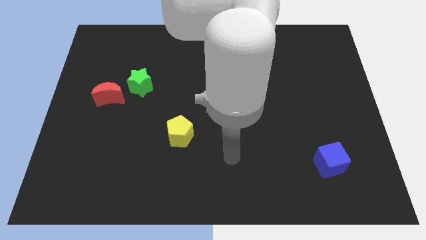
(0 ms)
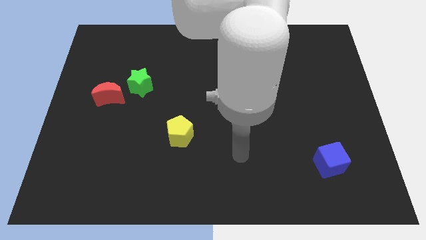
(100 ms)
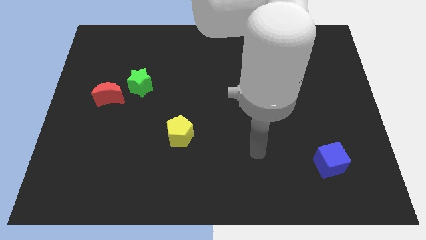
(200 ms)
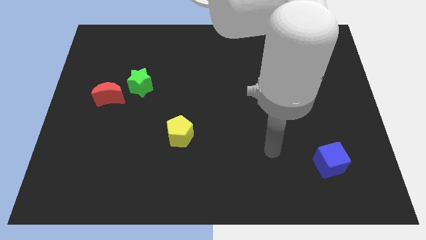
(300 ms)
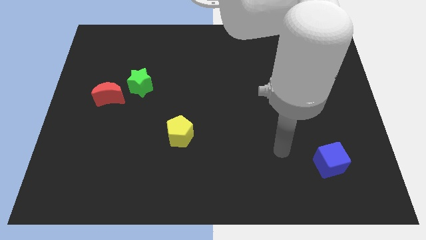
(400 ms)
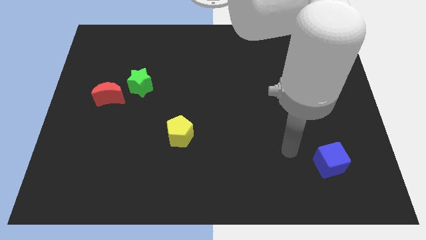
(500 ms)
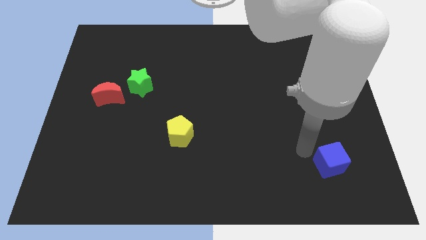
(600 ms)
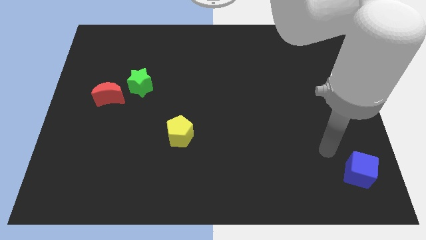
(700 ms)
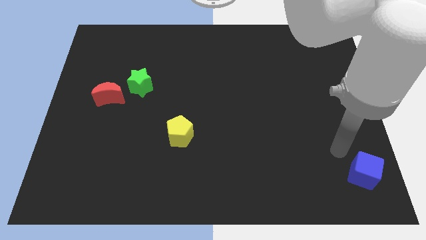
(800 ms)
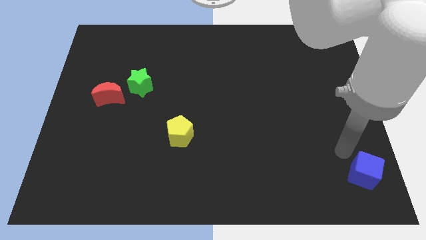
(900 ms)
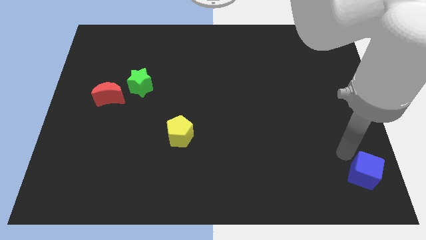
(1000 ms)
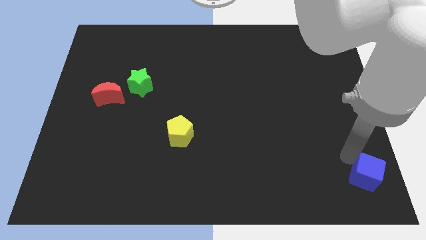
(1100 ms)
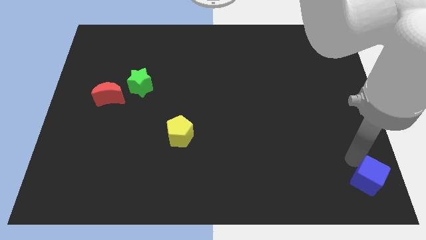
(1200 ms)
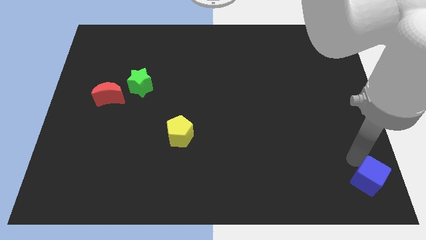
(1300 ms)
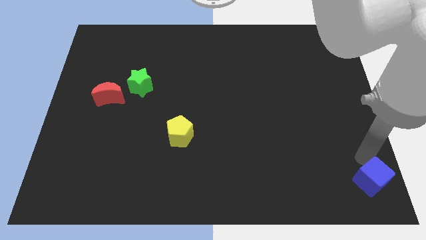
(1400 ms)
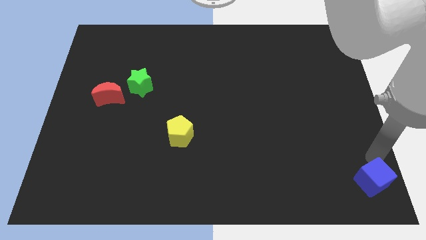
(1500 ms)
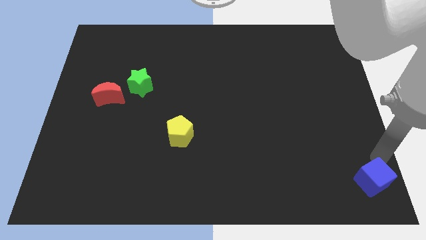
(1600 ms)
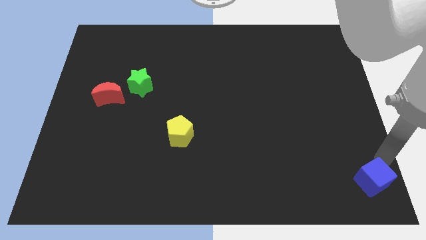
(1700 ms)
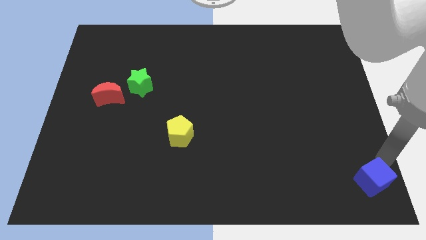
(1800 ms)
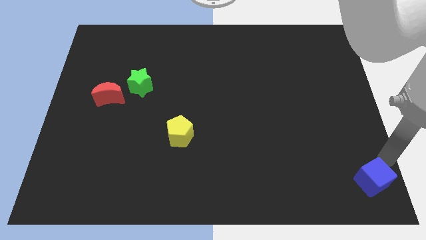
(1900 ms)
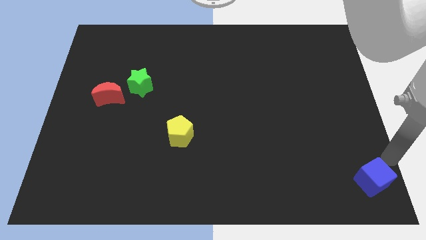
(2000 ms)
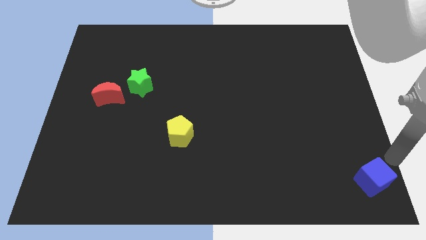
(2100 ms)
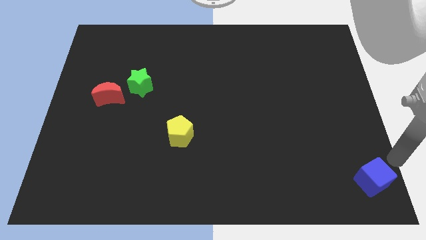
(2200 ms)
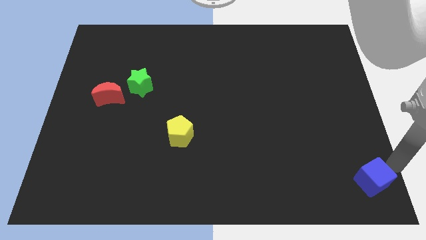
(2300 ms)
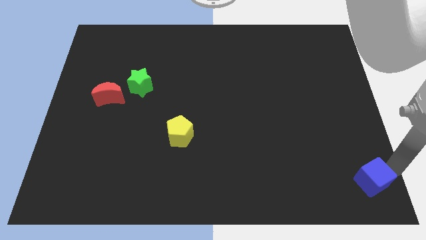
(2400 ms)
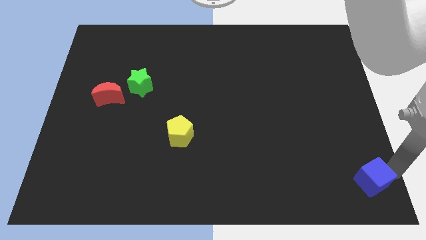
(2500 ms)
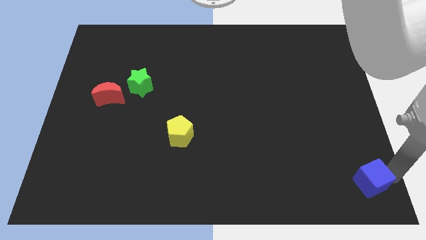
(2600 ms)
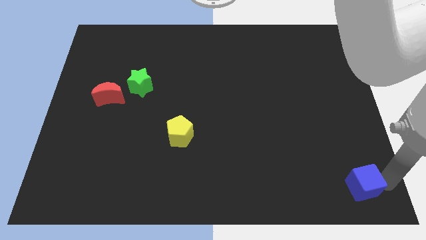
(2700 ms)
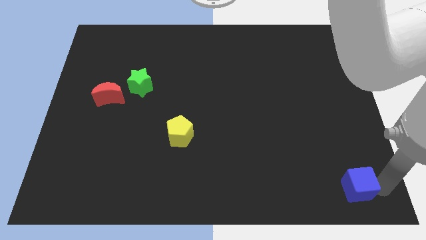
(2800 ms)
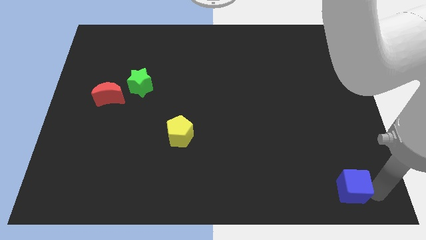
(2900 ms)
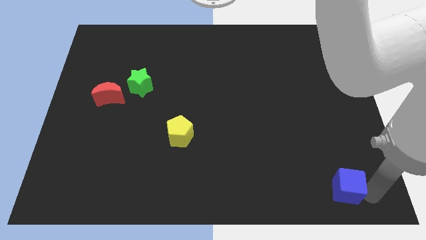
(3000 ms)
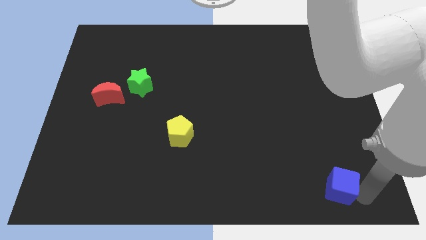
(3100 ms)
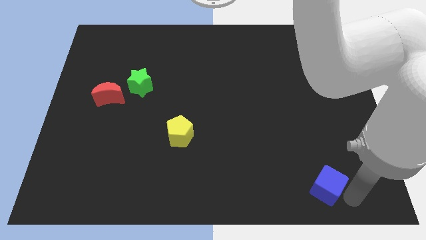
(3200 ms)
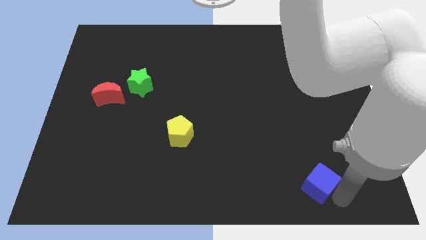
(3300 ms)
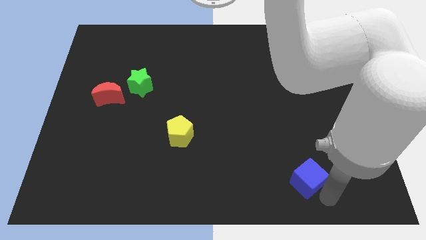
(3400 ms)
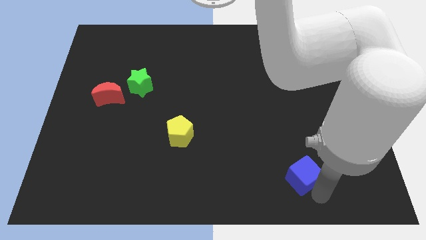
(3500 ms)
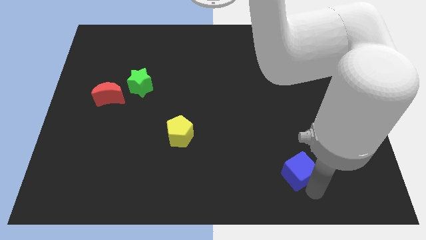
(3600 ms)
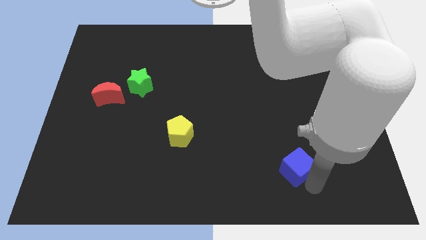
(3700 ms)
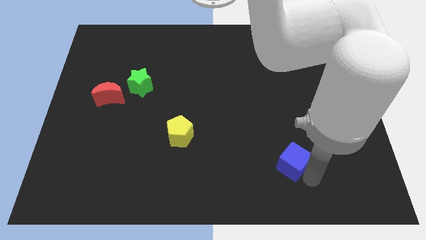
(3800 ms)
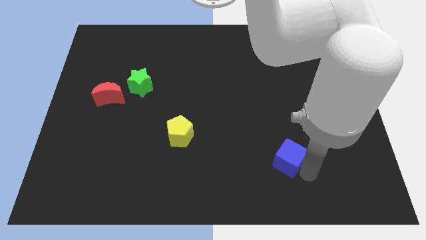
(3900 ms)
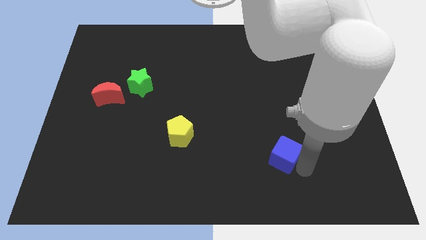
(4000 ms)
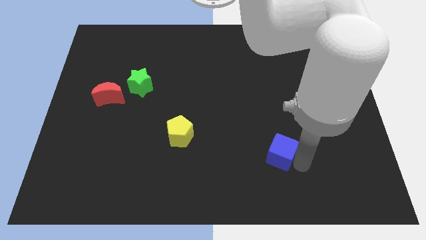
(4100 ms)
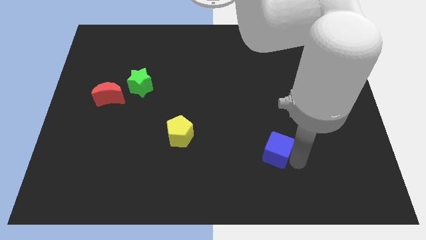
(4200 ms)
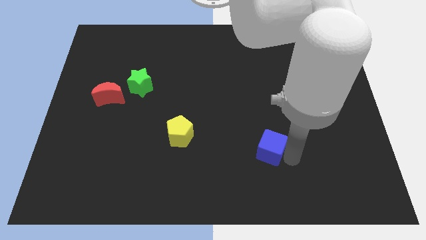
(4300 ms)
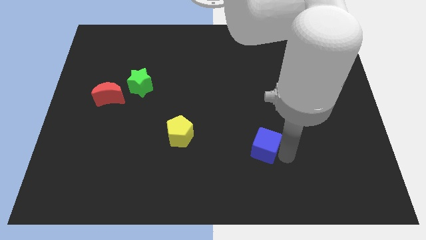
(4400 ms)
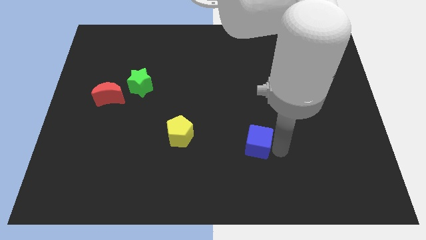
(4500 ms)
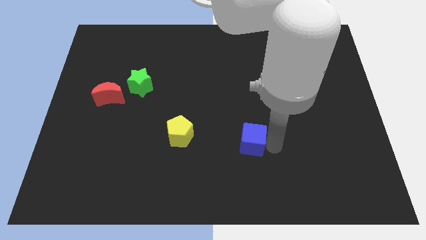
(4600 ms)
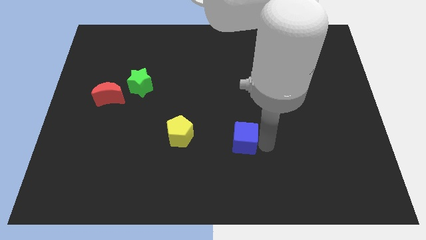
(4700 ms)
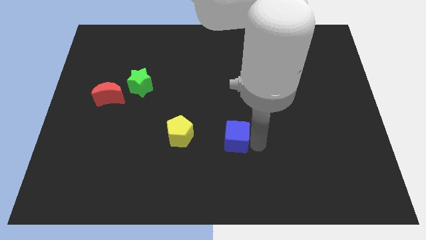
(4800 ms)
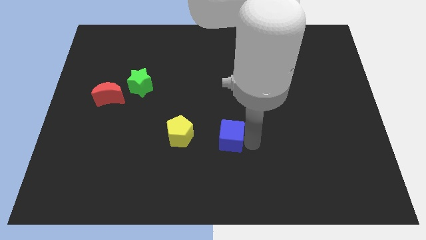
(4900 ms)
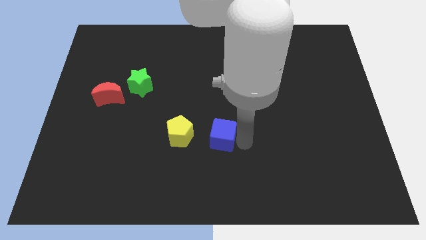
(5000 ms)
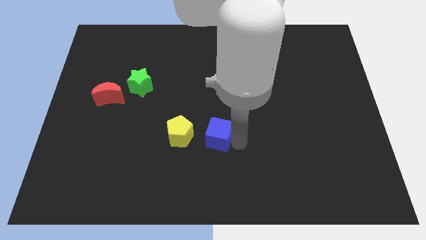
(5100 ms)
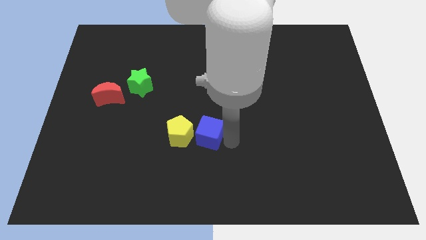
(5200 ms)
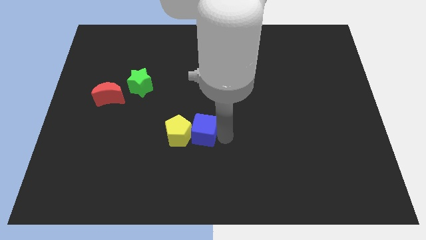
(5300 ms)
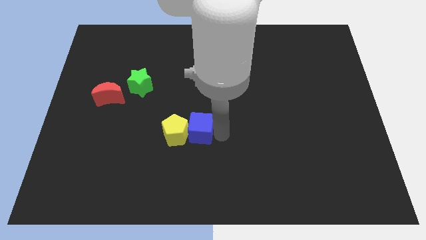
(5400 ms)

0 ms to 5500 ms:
slide the cube close to the yellow block

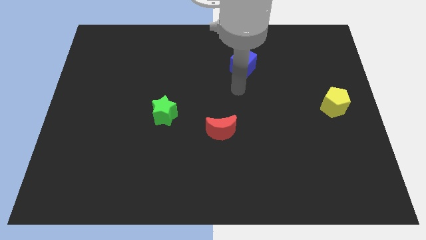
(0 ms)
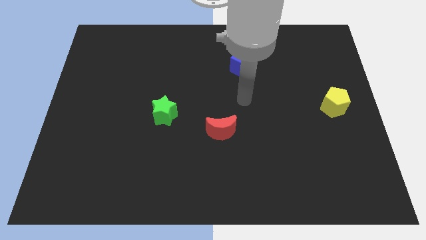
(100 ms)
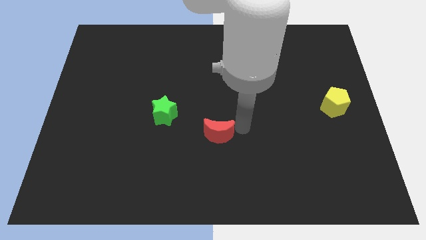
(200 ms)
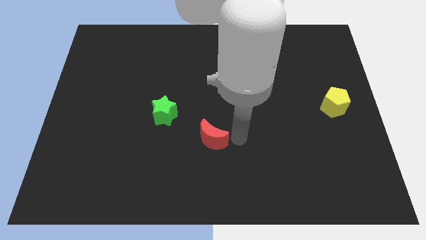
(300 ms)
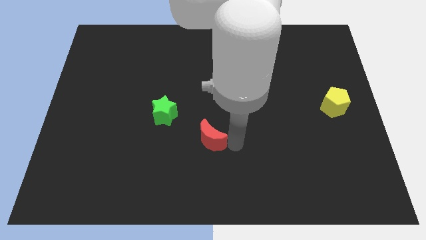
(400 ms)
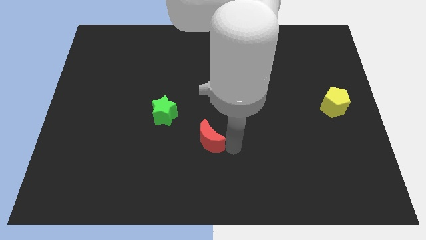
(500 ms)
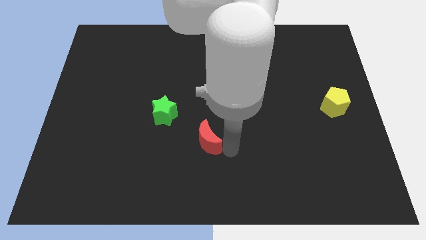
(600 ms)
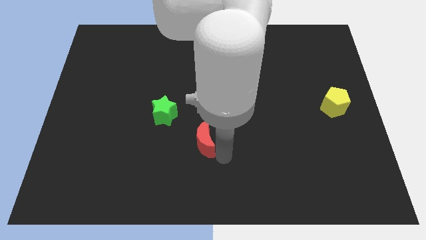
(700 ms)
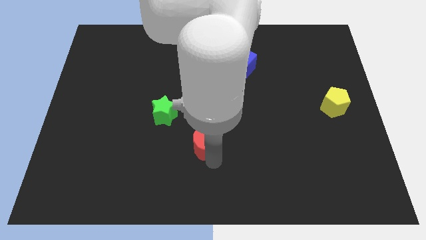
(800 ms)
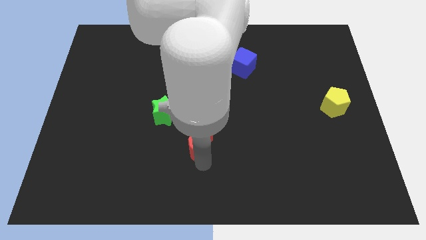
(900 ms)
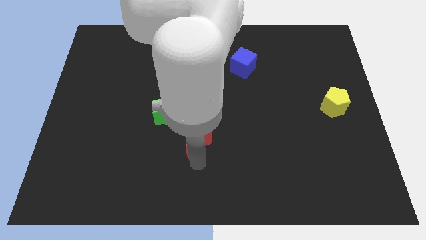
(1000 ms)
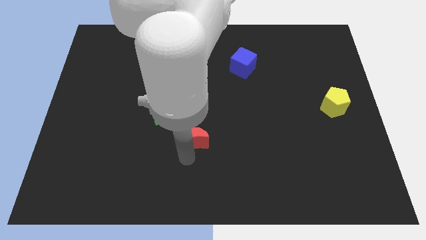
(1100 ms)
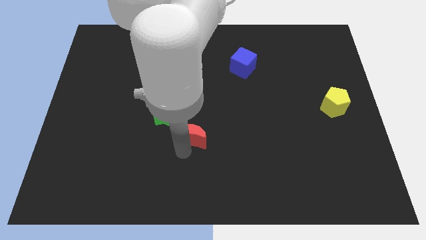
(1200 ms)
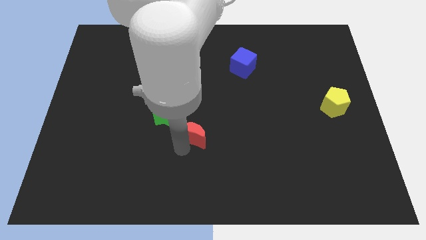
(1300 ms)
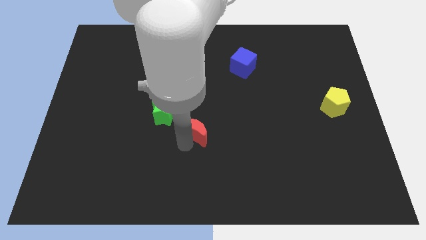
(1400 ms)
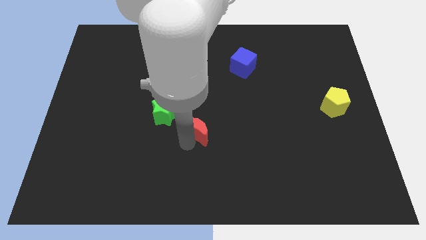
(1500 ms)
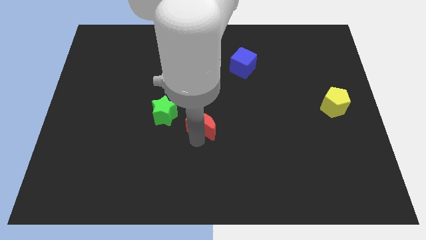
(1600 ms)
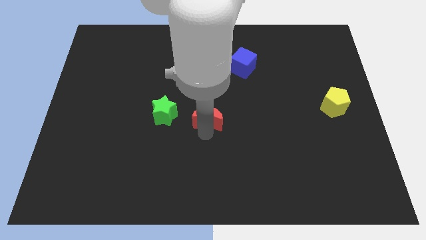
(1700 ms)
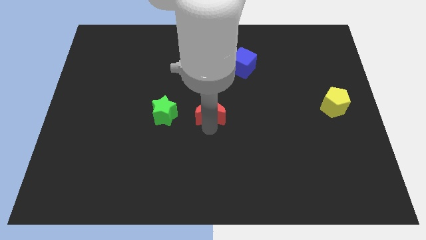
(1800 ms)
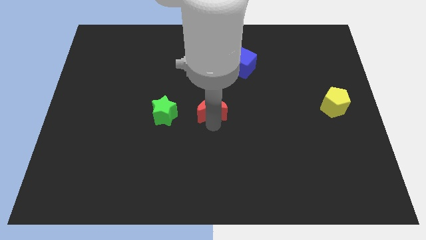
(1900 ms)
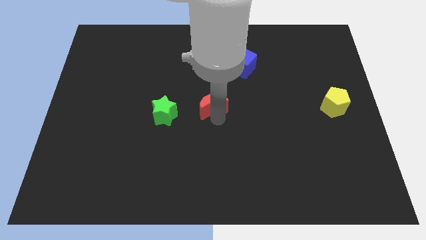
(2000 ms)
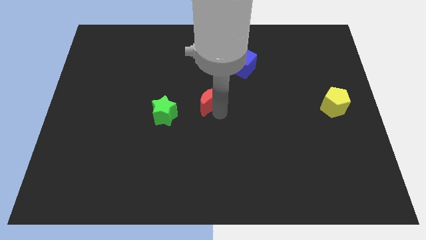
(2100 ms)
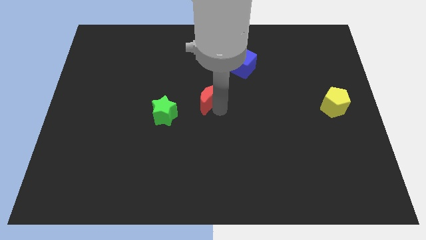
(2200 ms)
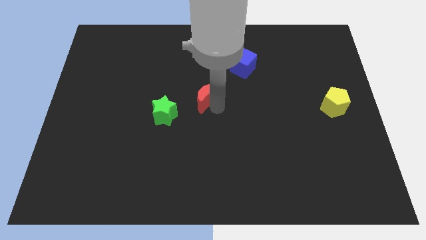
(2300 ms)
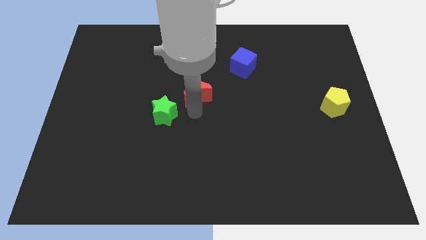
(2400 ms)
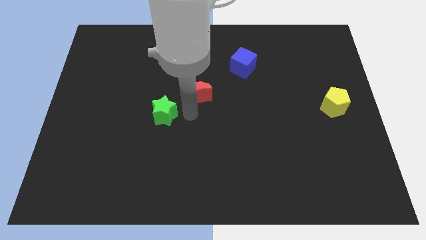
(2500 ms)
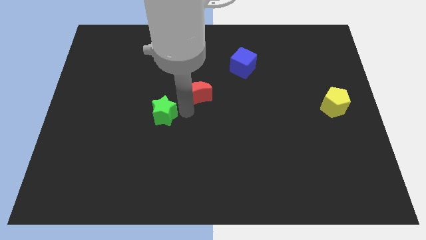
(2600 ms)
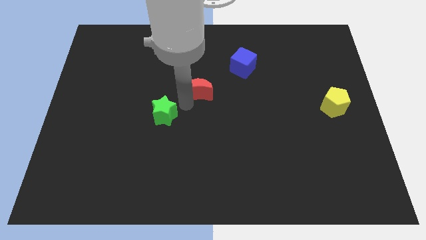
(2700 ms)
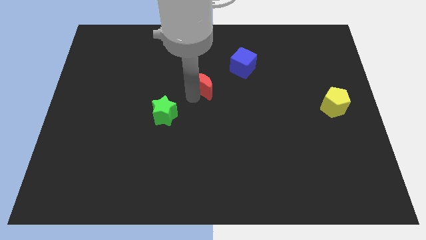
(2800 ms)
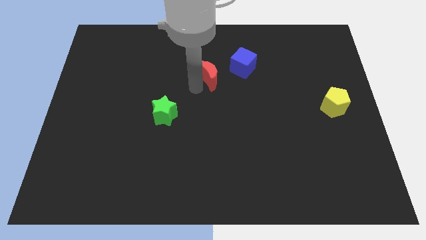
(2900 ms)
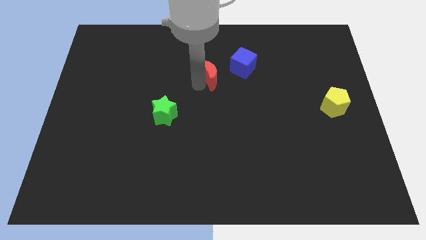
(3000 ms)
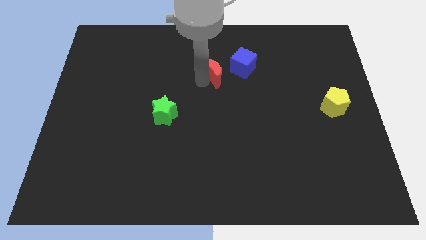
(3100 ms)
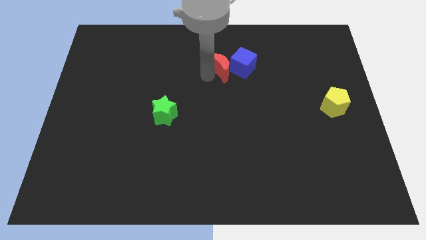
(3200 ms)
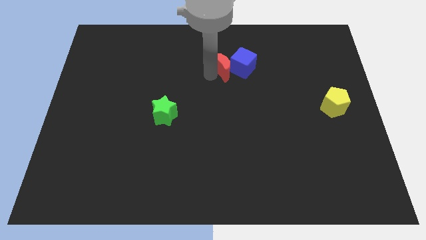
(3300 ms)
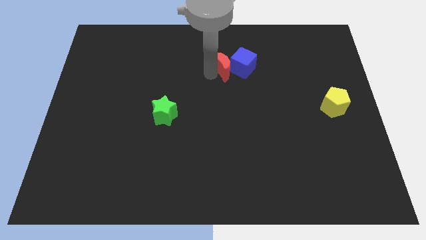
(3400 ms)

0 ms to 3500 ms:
move the red moon to the cube
